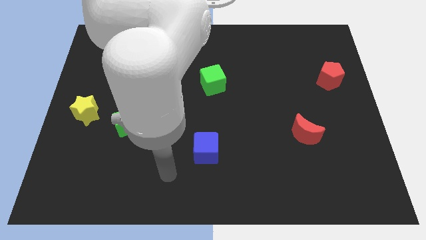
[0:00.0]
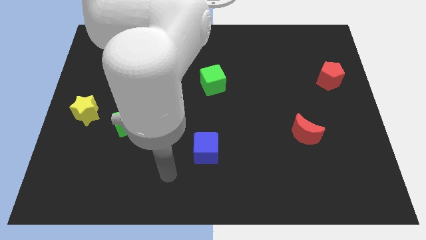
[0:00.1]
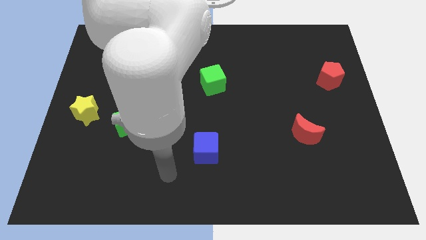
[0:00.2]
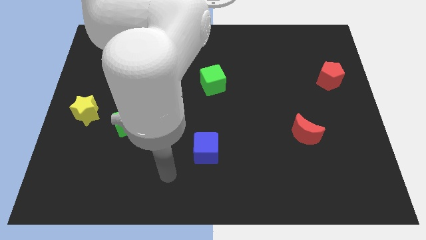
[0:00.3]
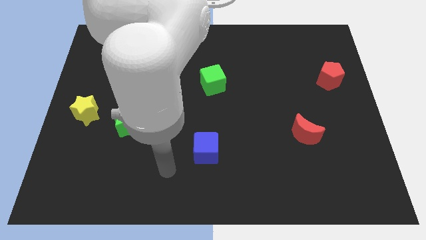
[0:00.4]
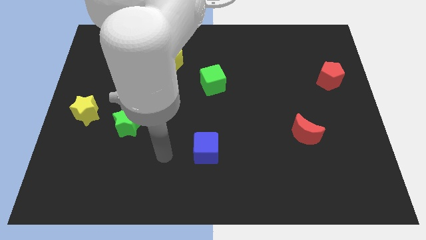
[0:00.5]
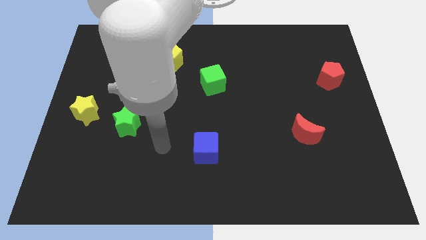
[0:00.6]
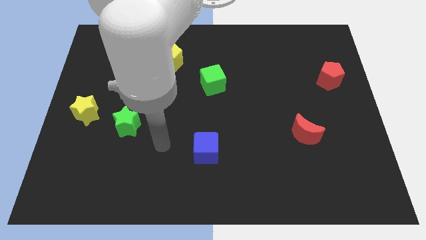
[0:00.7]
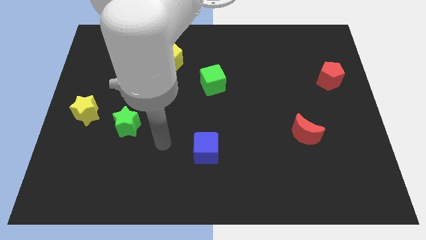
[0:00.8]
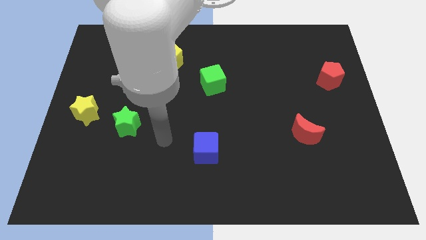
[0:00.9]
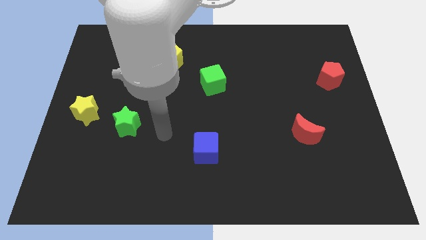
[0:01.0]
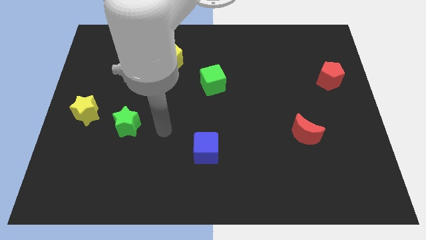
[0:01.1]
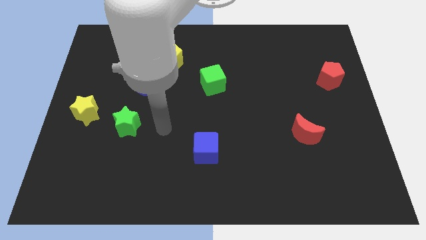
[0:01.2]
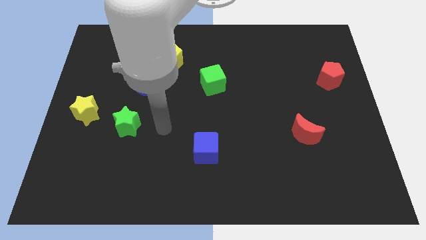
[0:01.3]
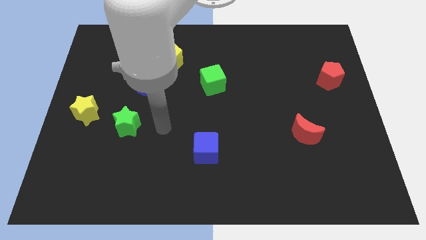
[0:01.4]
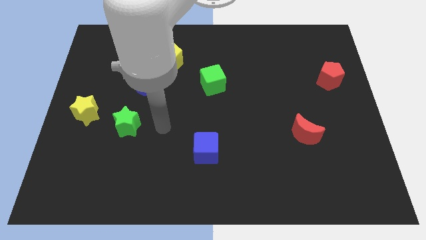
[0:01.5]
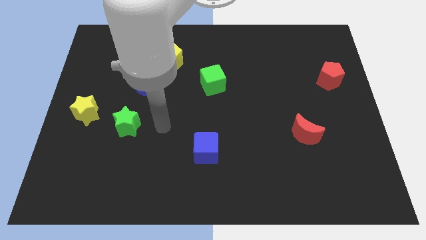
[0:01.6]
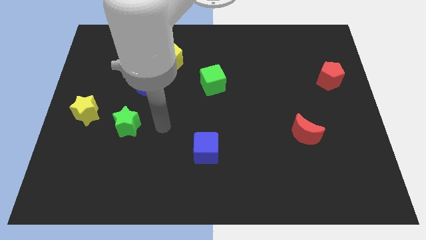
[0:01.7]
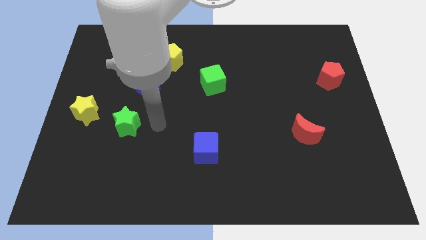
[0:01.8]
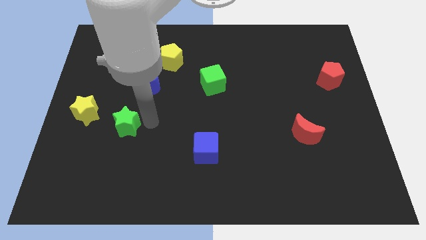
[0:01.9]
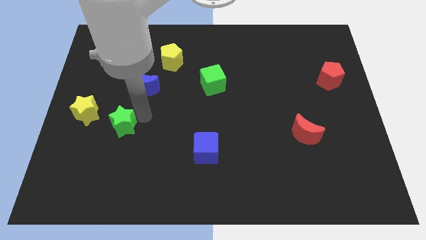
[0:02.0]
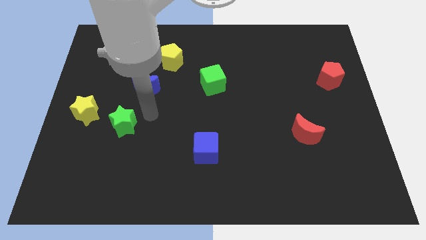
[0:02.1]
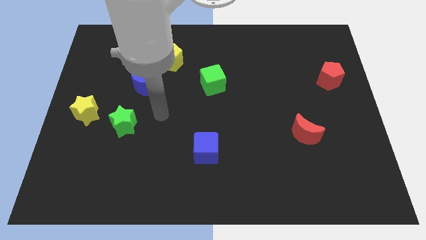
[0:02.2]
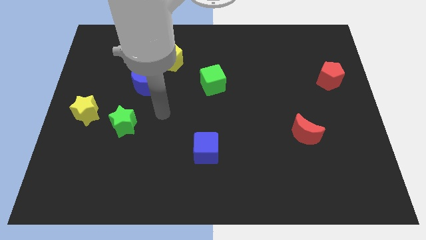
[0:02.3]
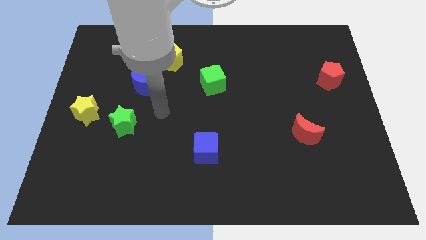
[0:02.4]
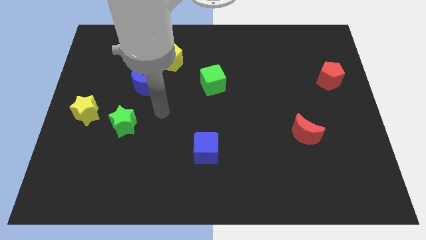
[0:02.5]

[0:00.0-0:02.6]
tap the green star

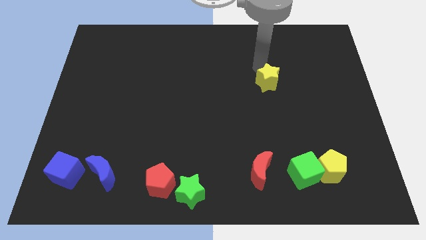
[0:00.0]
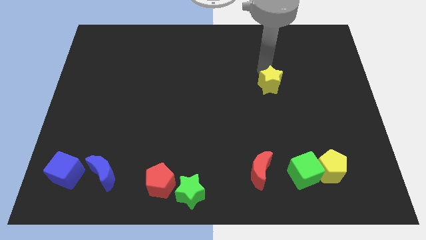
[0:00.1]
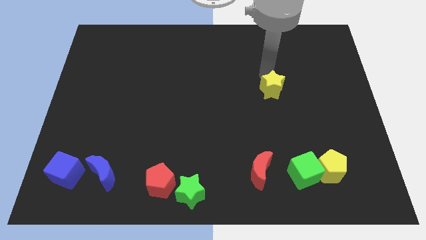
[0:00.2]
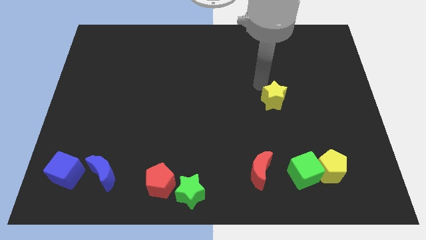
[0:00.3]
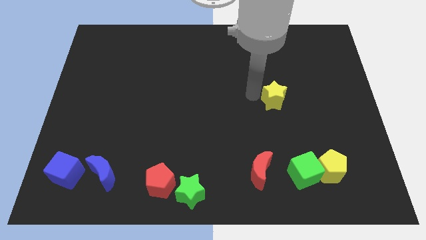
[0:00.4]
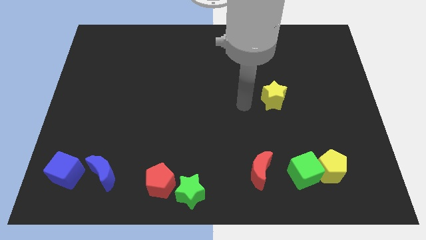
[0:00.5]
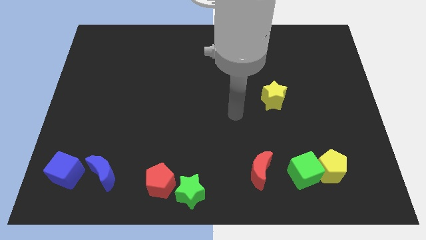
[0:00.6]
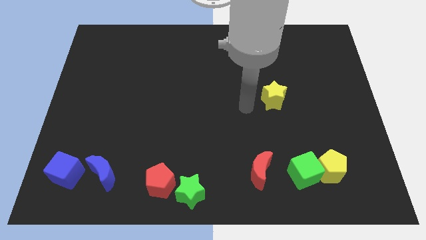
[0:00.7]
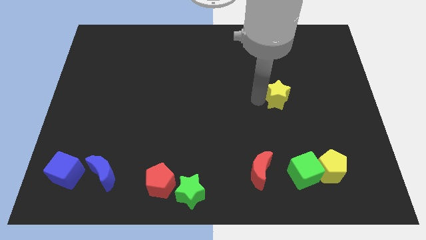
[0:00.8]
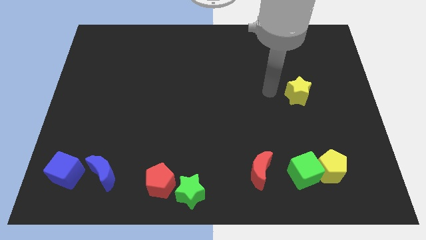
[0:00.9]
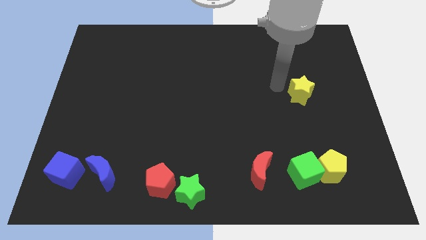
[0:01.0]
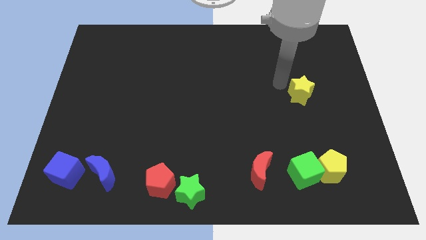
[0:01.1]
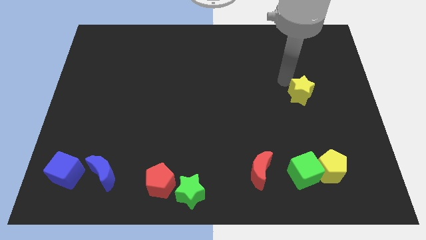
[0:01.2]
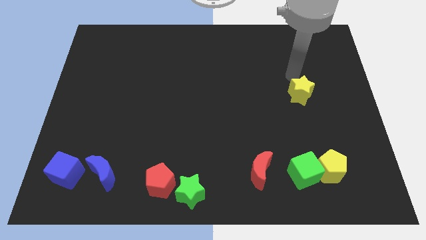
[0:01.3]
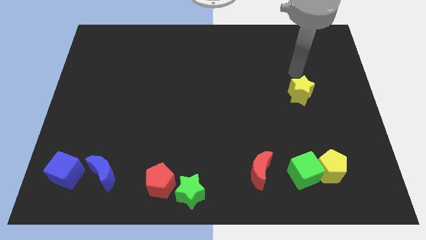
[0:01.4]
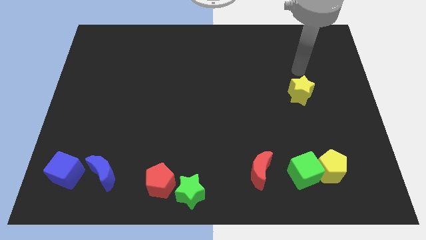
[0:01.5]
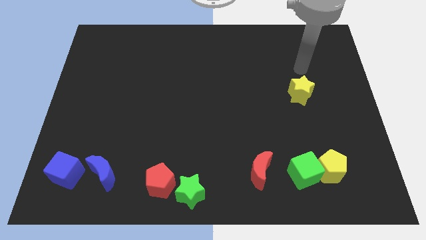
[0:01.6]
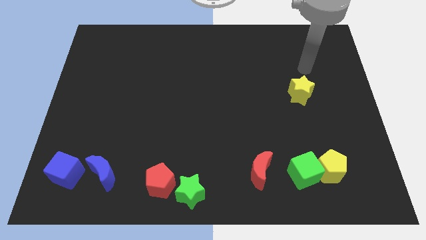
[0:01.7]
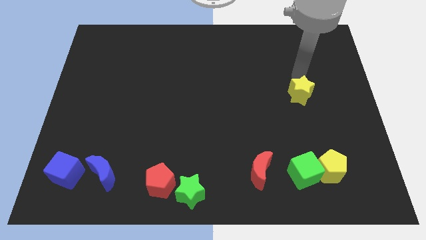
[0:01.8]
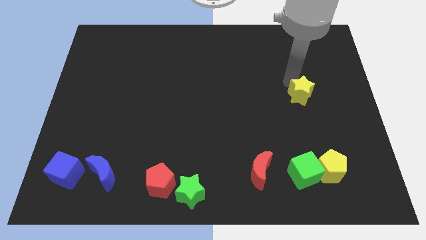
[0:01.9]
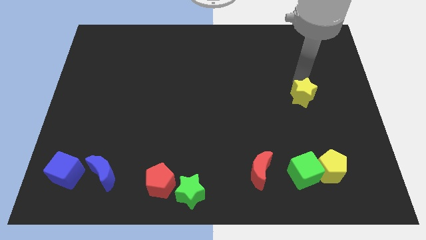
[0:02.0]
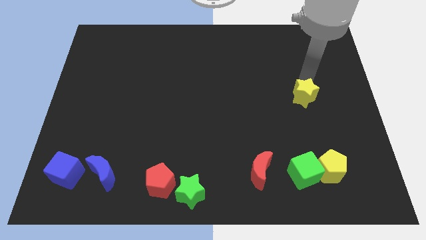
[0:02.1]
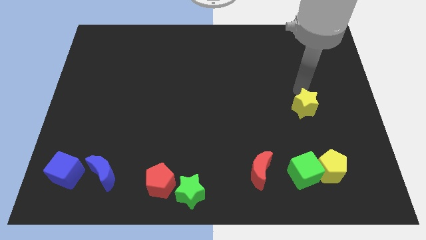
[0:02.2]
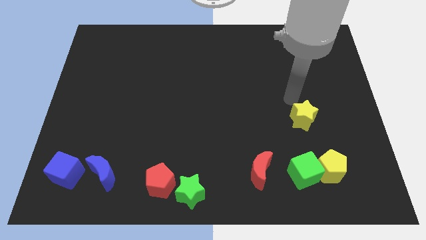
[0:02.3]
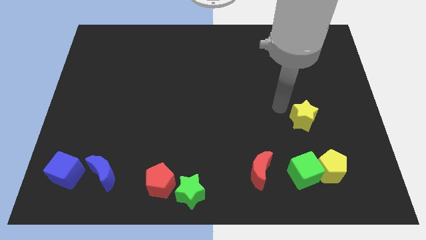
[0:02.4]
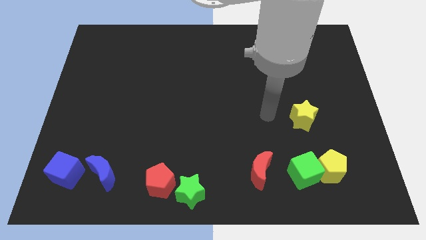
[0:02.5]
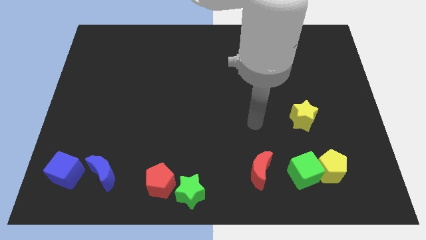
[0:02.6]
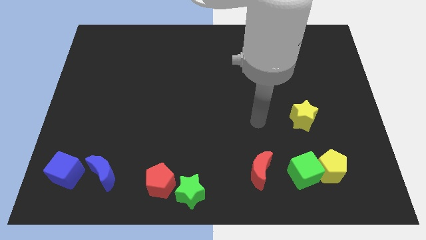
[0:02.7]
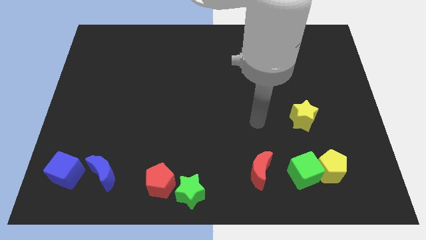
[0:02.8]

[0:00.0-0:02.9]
place the yellow star diagonally top right to the red moon

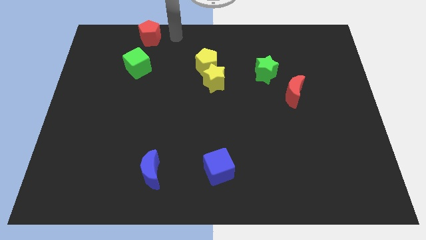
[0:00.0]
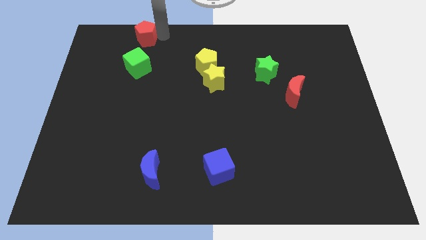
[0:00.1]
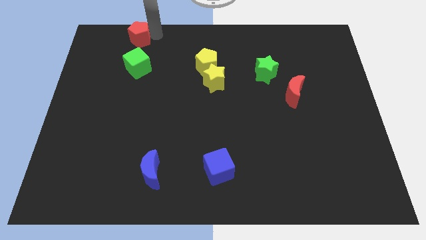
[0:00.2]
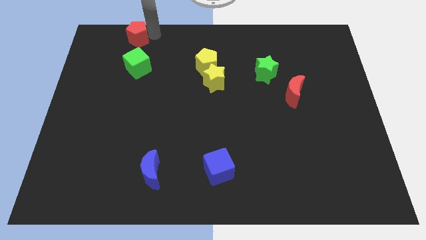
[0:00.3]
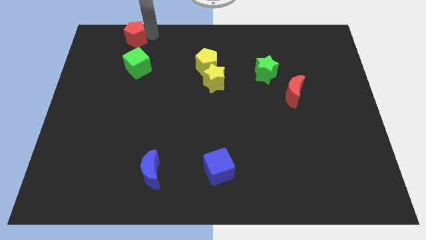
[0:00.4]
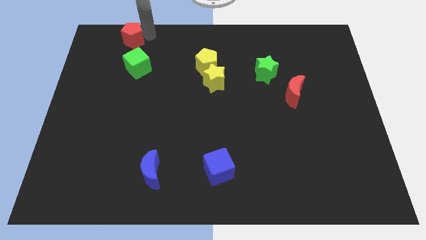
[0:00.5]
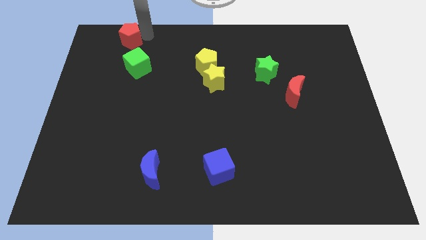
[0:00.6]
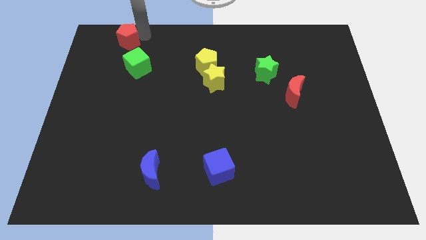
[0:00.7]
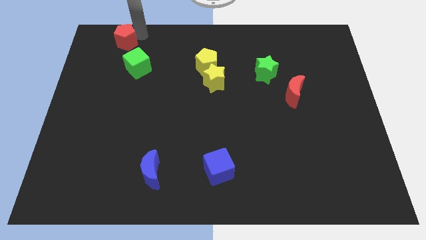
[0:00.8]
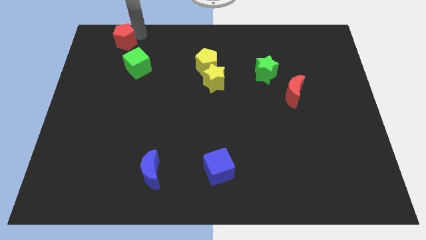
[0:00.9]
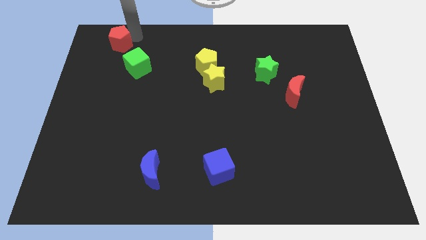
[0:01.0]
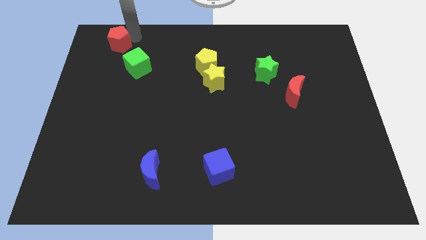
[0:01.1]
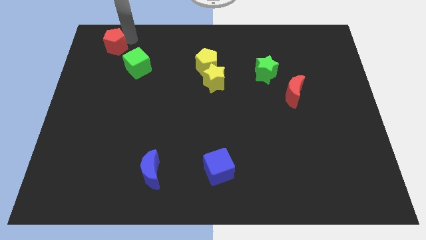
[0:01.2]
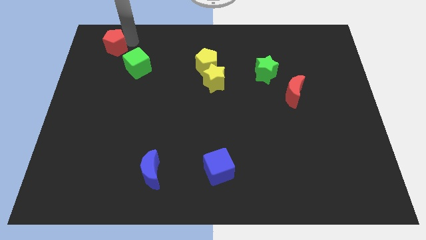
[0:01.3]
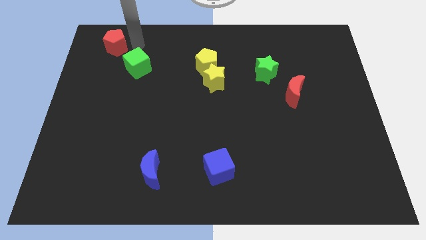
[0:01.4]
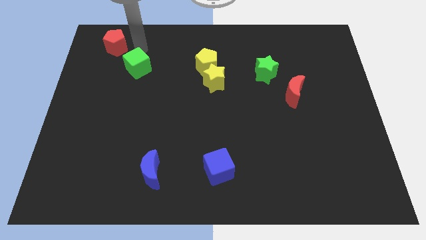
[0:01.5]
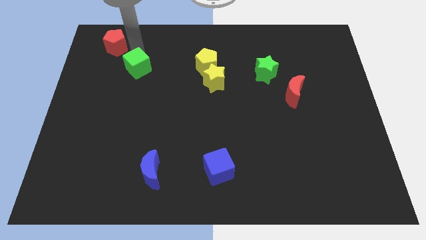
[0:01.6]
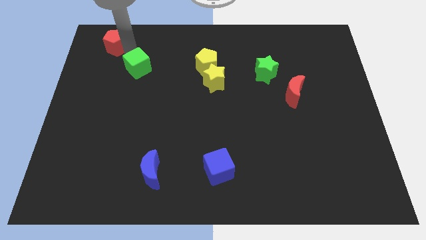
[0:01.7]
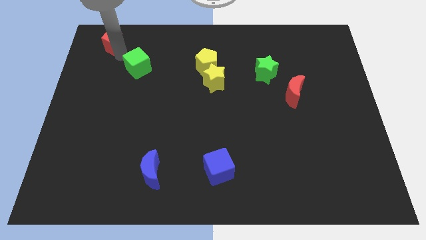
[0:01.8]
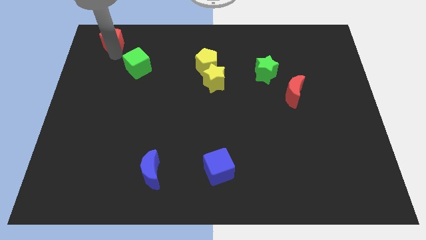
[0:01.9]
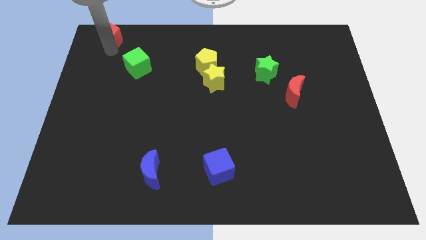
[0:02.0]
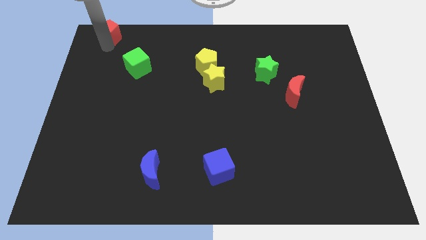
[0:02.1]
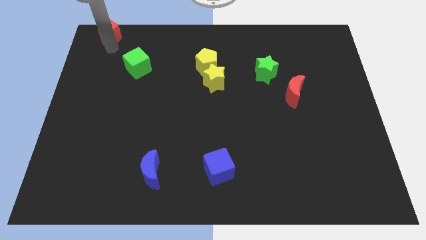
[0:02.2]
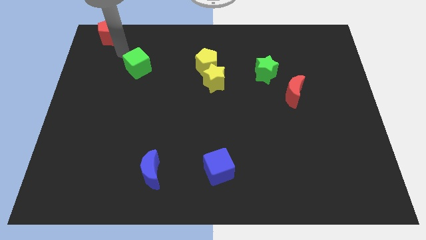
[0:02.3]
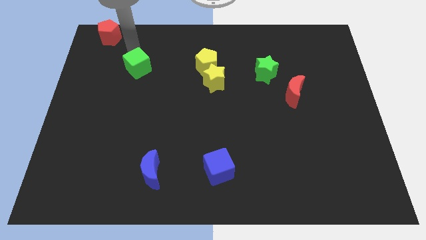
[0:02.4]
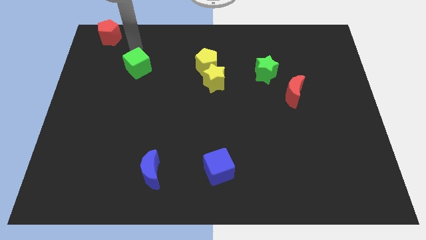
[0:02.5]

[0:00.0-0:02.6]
move slightly the red pentagon to the left side of the board

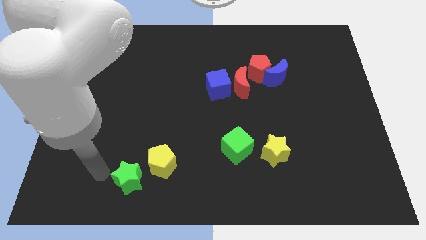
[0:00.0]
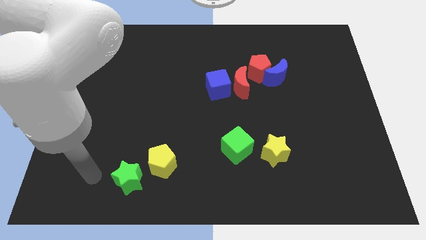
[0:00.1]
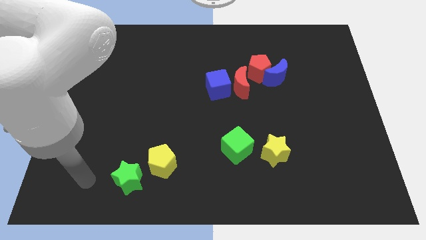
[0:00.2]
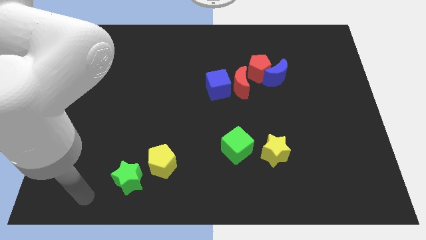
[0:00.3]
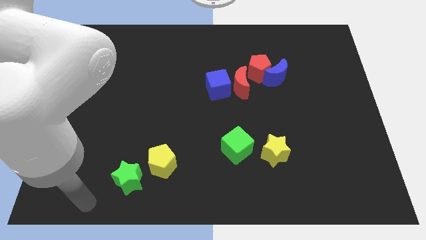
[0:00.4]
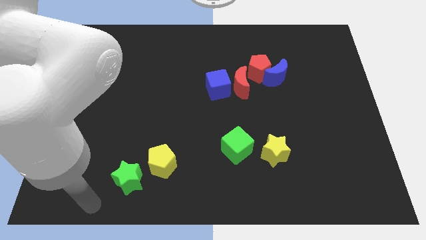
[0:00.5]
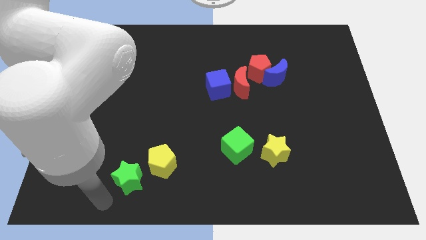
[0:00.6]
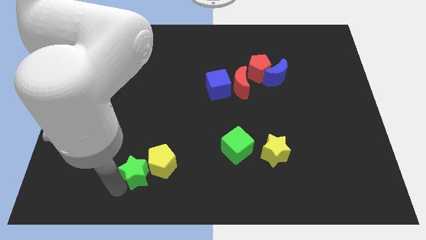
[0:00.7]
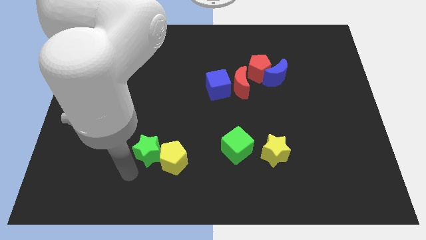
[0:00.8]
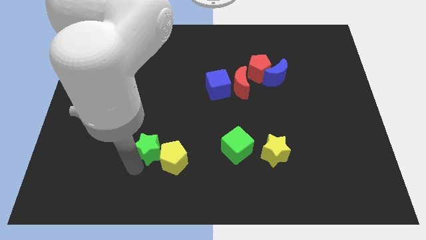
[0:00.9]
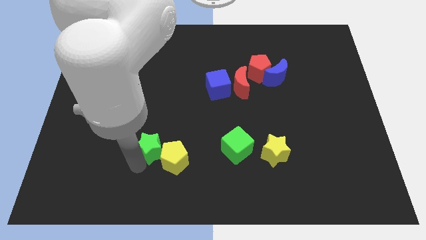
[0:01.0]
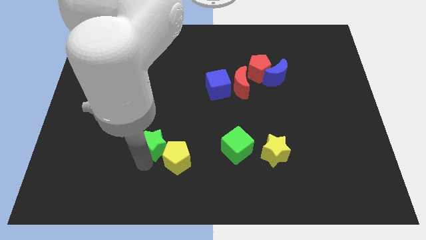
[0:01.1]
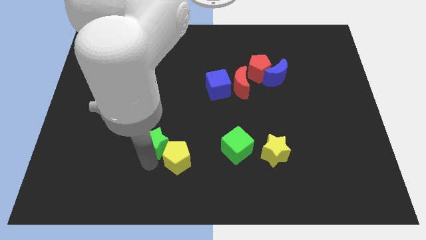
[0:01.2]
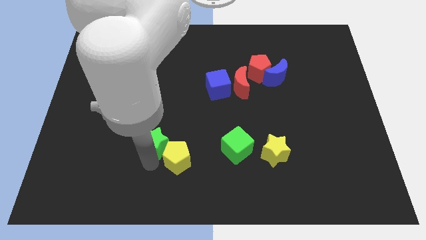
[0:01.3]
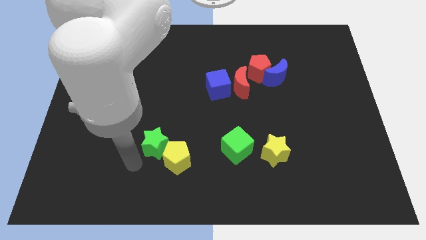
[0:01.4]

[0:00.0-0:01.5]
push the green star into the yellow pentagon
